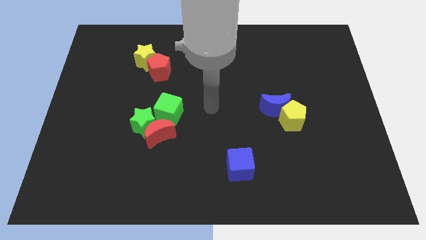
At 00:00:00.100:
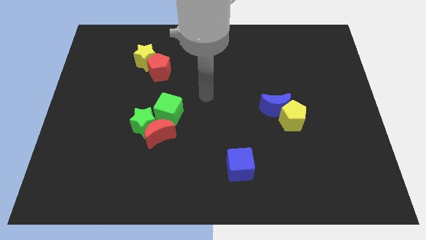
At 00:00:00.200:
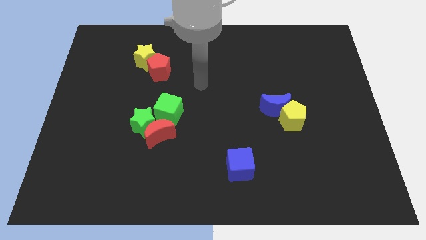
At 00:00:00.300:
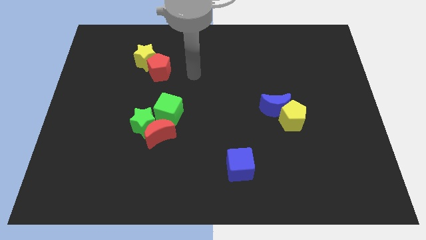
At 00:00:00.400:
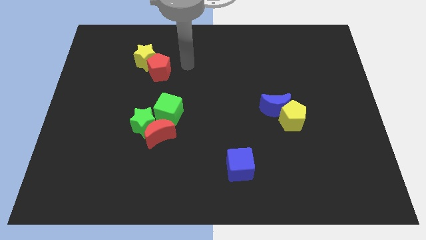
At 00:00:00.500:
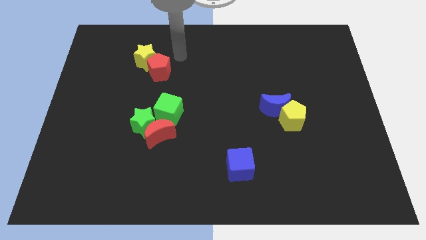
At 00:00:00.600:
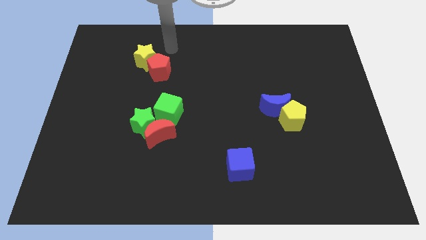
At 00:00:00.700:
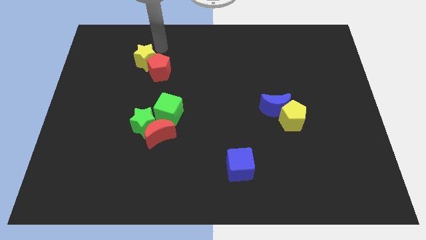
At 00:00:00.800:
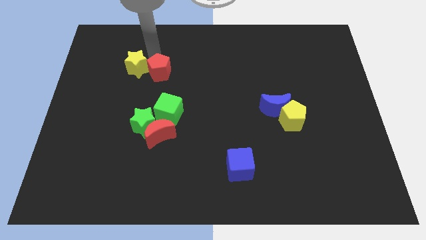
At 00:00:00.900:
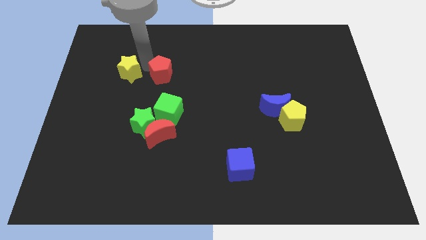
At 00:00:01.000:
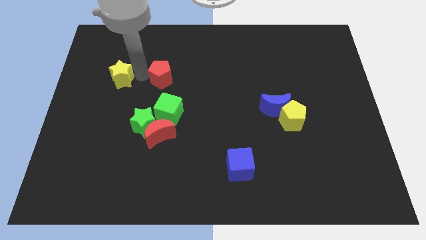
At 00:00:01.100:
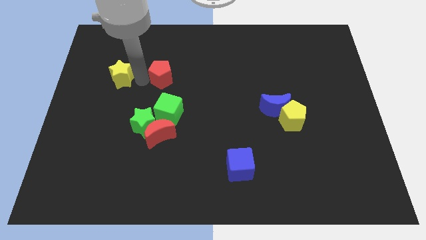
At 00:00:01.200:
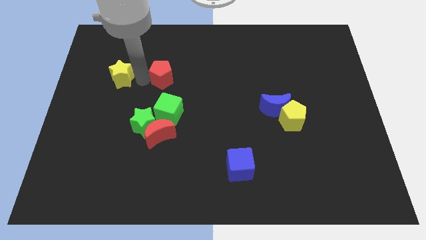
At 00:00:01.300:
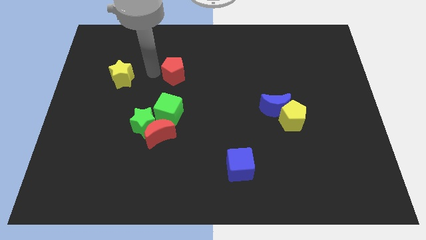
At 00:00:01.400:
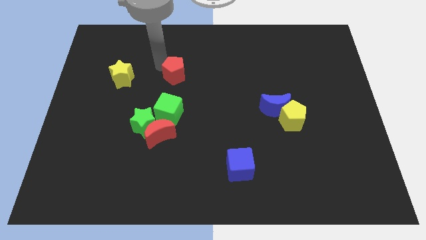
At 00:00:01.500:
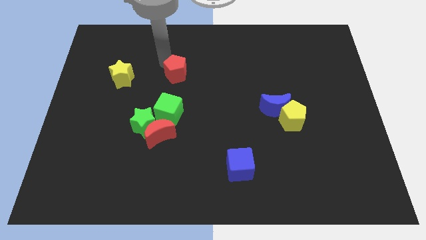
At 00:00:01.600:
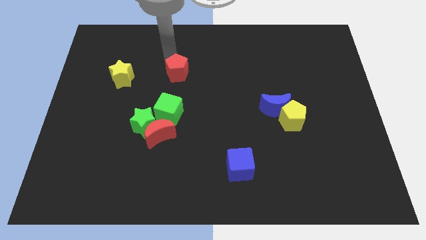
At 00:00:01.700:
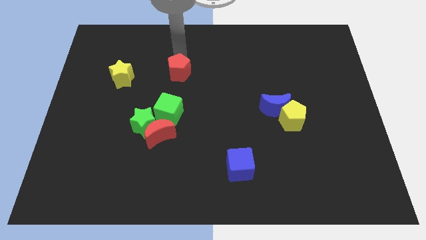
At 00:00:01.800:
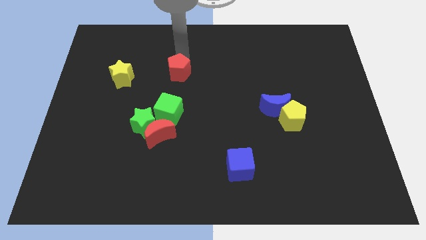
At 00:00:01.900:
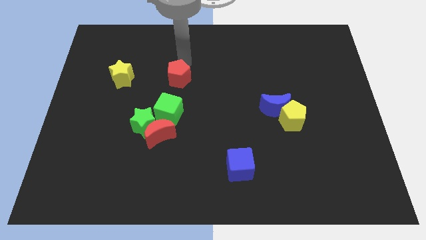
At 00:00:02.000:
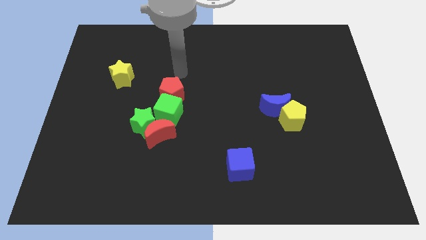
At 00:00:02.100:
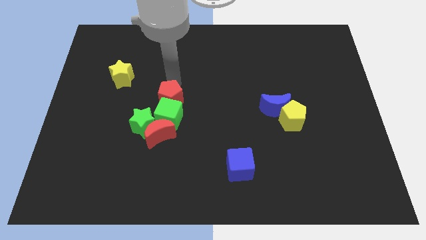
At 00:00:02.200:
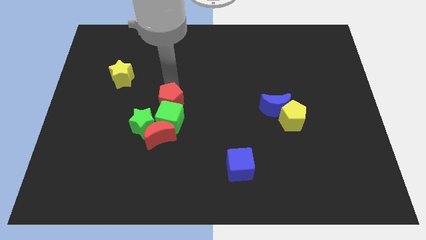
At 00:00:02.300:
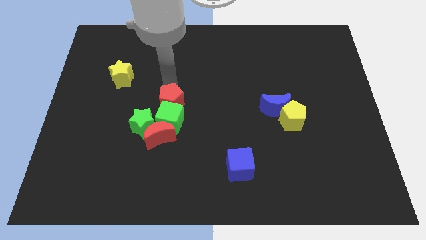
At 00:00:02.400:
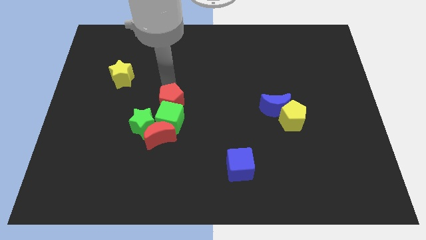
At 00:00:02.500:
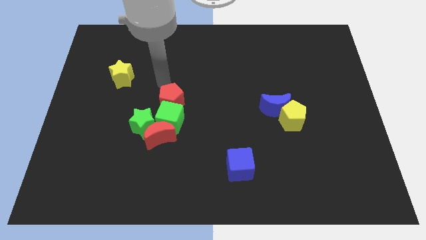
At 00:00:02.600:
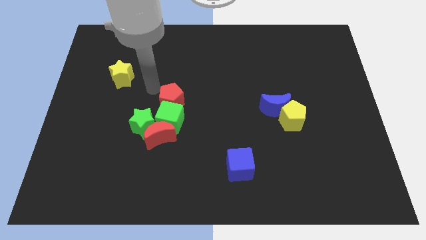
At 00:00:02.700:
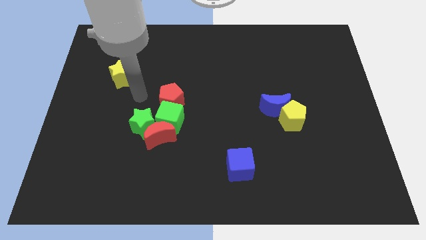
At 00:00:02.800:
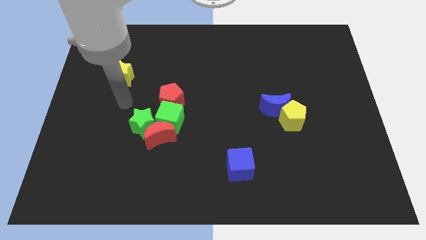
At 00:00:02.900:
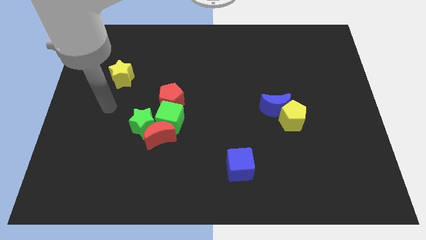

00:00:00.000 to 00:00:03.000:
place the red pentagon above the green cube

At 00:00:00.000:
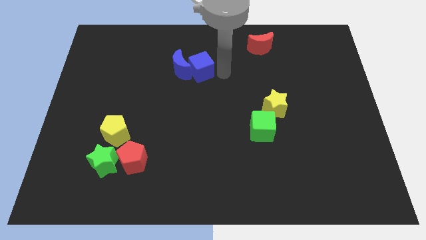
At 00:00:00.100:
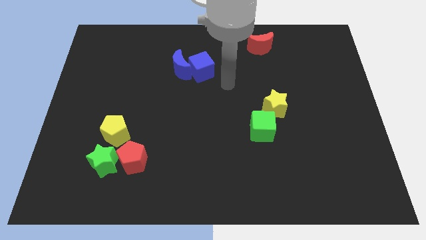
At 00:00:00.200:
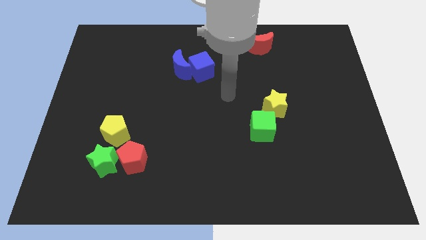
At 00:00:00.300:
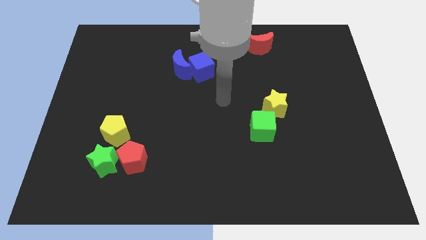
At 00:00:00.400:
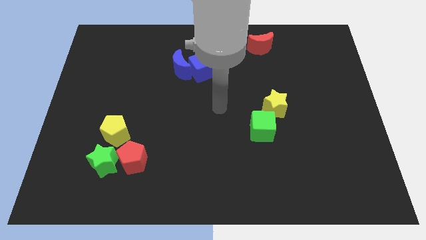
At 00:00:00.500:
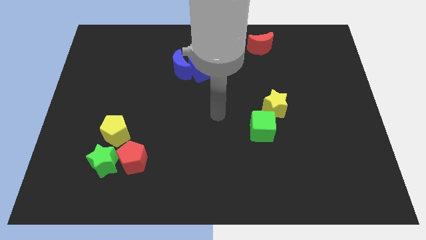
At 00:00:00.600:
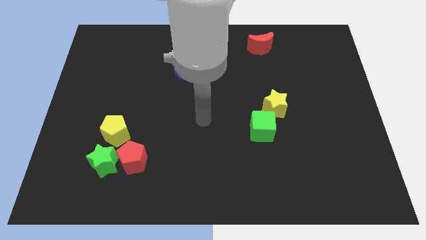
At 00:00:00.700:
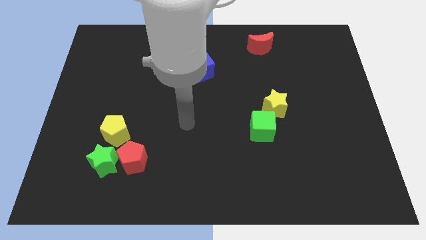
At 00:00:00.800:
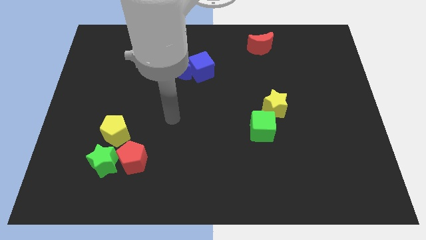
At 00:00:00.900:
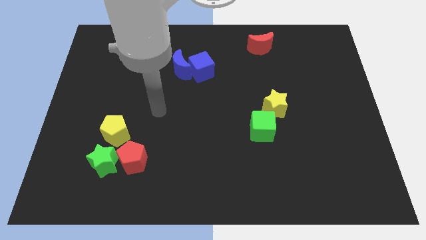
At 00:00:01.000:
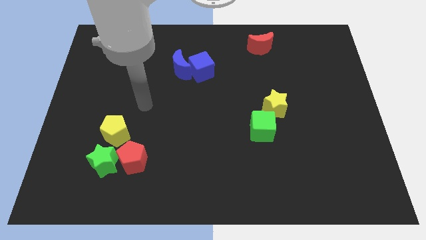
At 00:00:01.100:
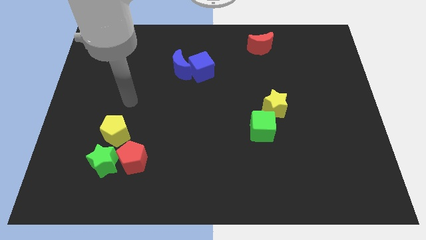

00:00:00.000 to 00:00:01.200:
put your arm in between the blue moon and yellow pentagon

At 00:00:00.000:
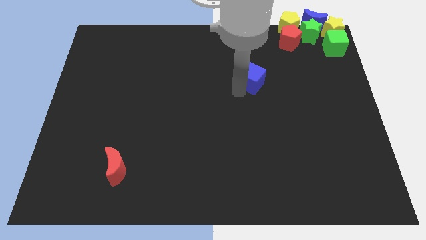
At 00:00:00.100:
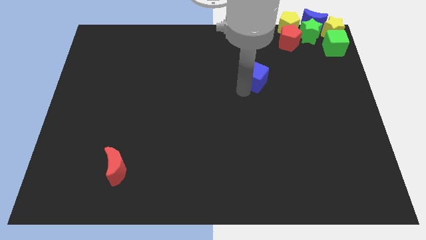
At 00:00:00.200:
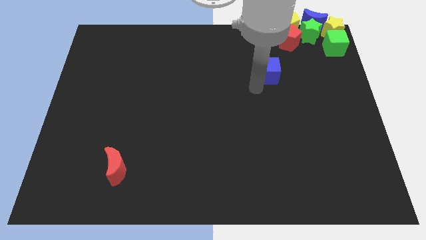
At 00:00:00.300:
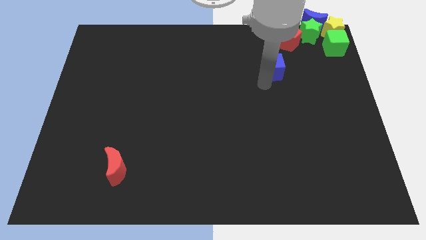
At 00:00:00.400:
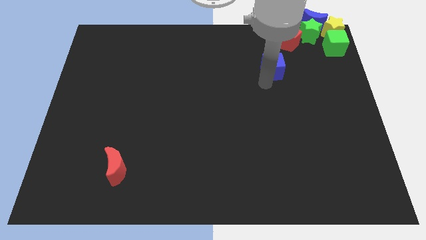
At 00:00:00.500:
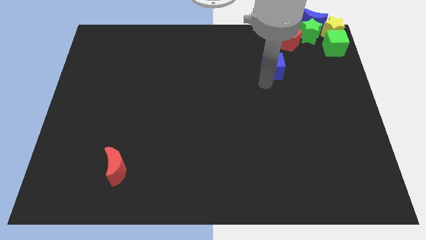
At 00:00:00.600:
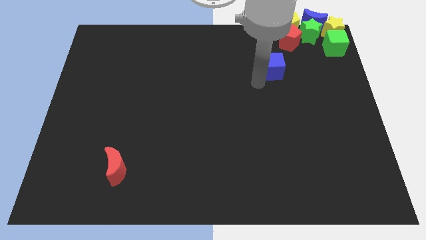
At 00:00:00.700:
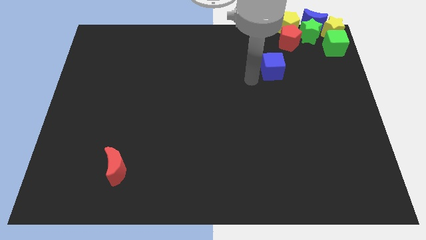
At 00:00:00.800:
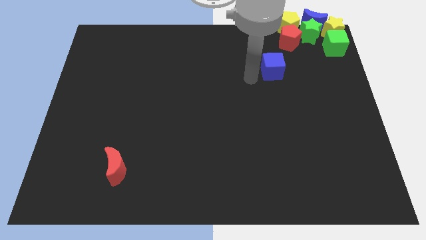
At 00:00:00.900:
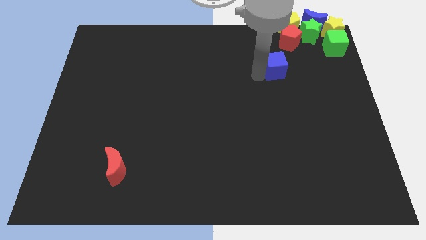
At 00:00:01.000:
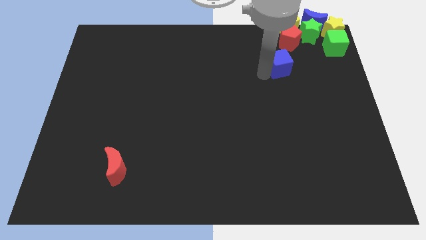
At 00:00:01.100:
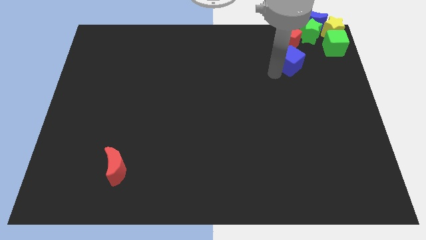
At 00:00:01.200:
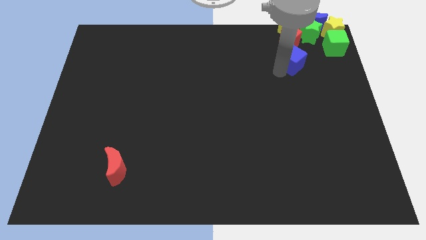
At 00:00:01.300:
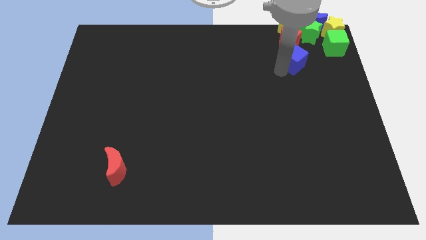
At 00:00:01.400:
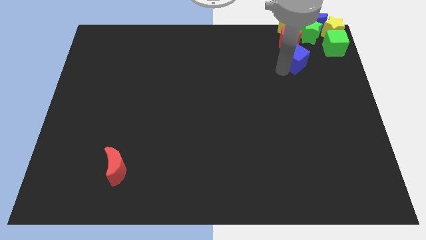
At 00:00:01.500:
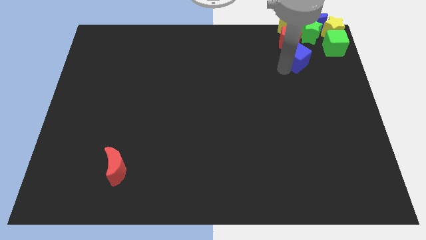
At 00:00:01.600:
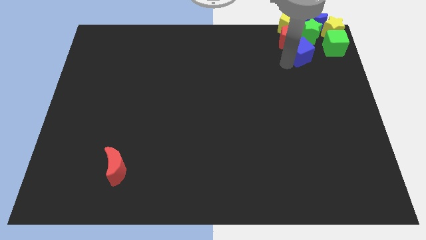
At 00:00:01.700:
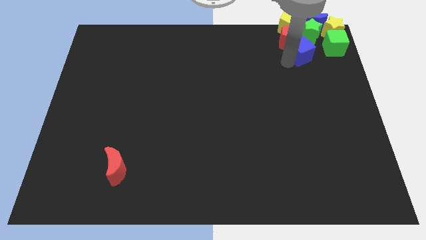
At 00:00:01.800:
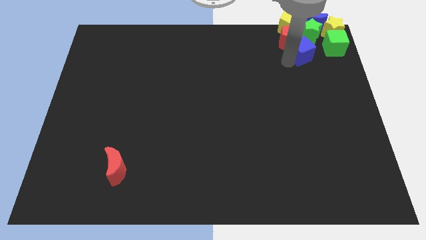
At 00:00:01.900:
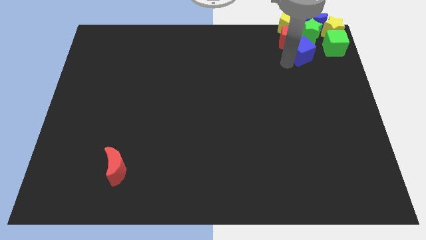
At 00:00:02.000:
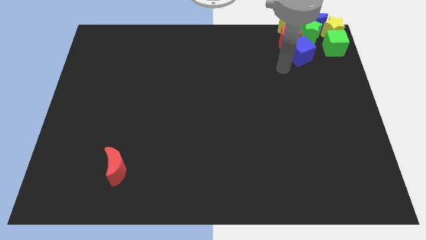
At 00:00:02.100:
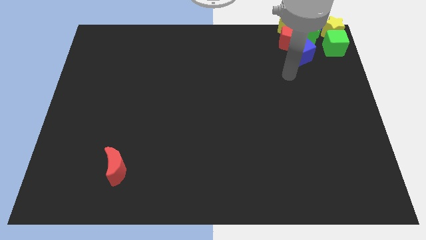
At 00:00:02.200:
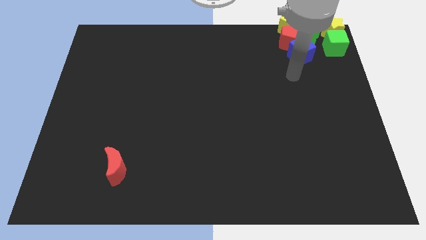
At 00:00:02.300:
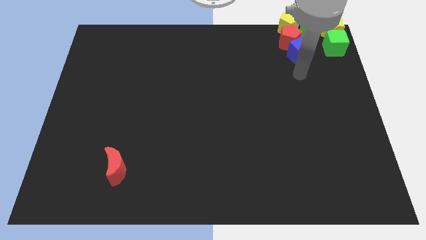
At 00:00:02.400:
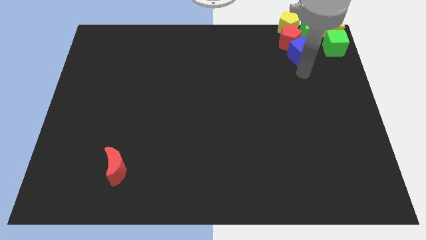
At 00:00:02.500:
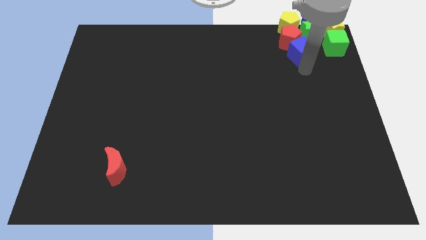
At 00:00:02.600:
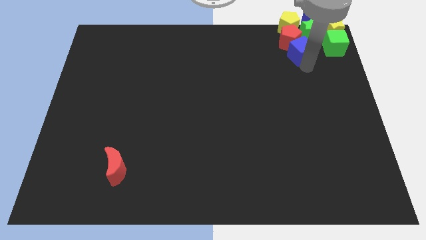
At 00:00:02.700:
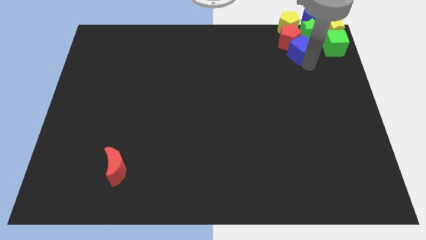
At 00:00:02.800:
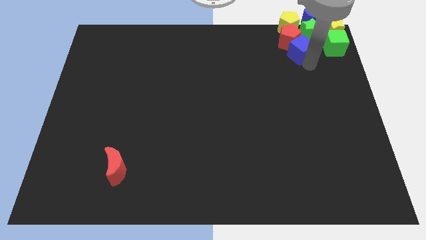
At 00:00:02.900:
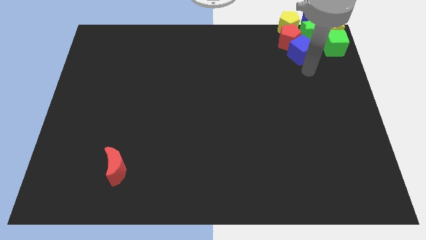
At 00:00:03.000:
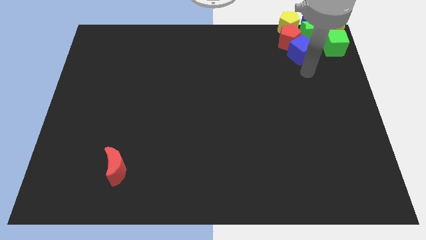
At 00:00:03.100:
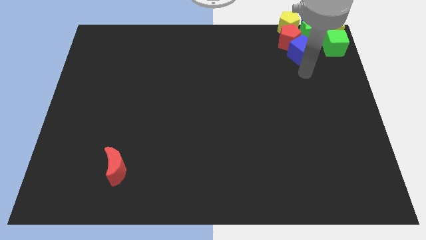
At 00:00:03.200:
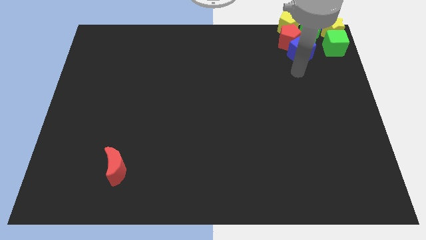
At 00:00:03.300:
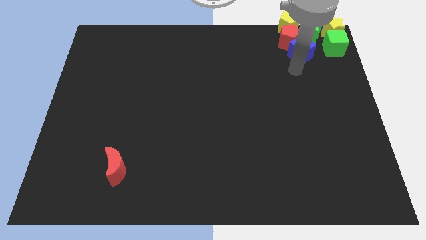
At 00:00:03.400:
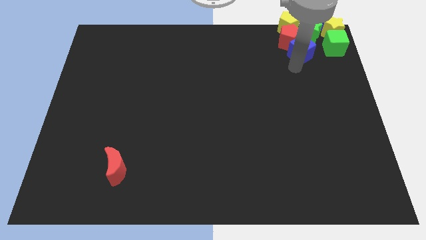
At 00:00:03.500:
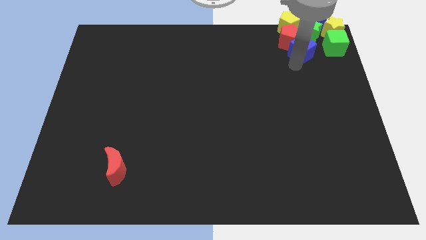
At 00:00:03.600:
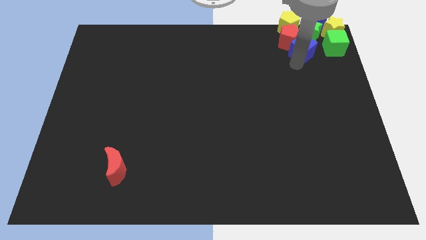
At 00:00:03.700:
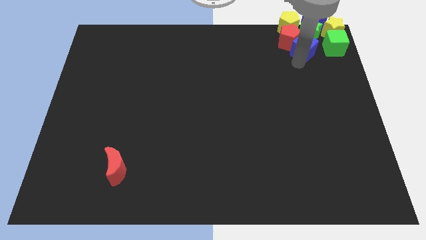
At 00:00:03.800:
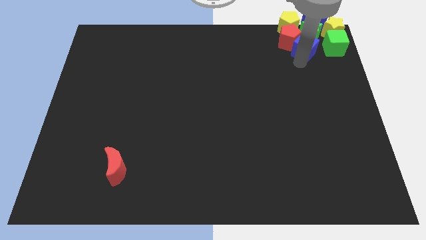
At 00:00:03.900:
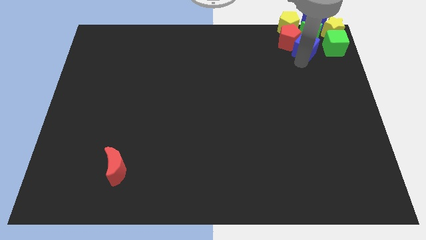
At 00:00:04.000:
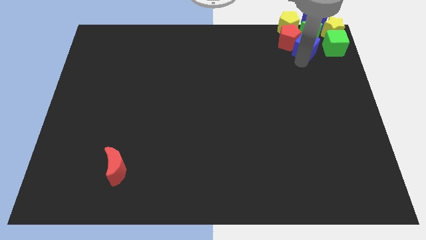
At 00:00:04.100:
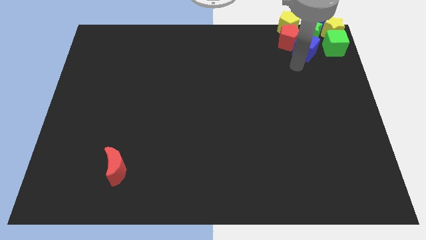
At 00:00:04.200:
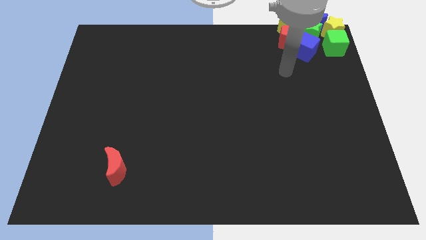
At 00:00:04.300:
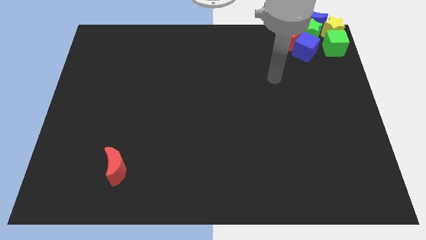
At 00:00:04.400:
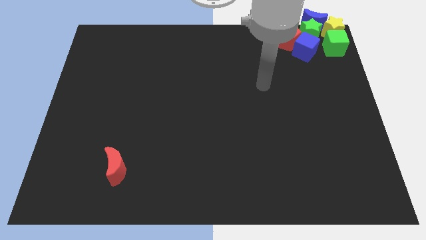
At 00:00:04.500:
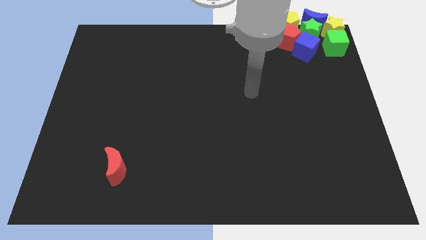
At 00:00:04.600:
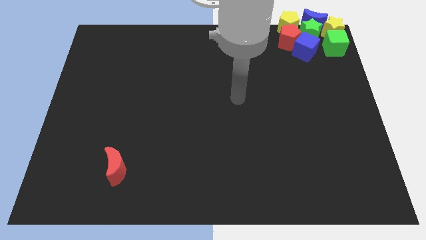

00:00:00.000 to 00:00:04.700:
move blue cube below the green star
